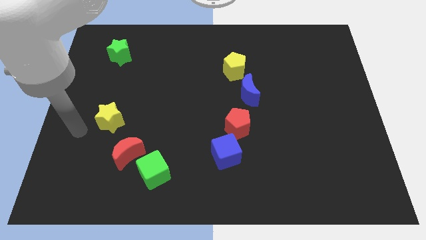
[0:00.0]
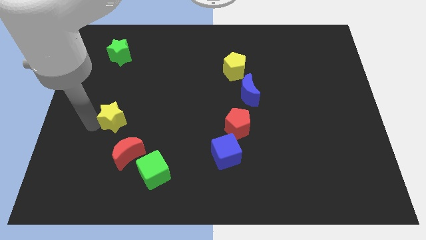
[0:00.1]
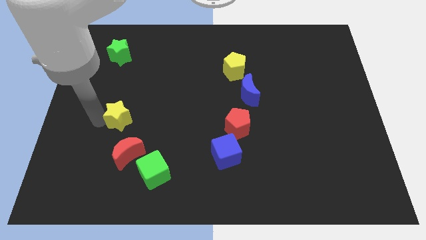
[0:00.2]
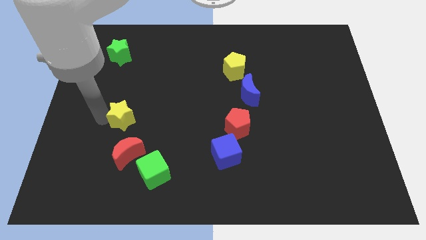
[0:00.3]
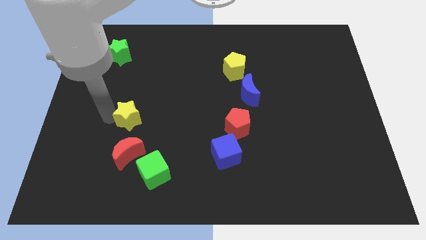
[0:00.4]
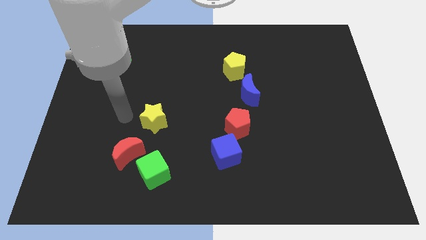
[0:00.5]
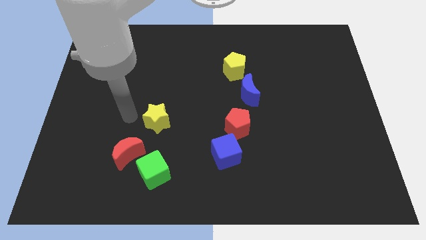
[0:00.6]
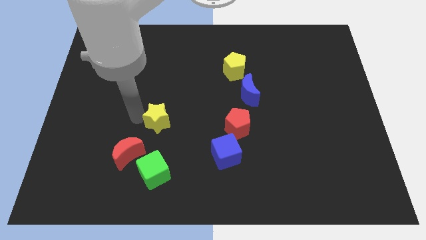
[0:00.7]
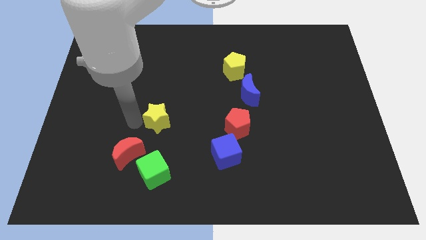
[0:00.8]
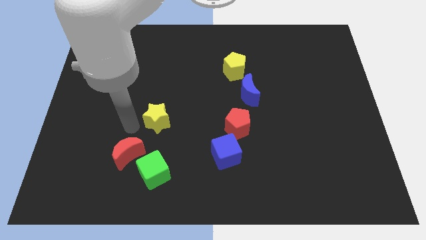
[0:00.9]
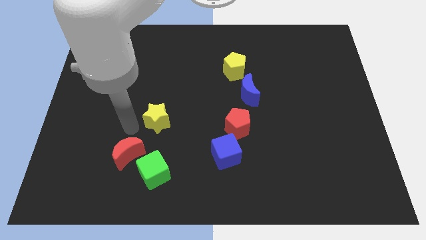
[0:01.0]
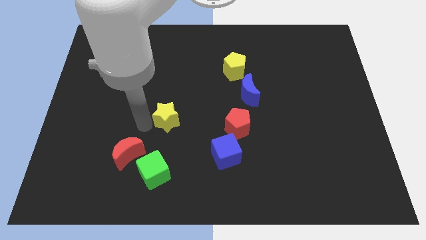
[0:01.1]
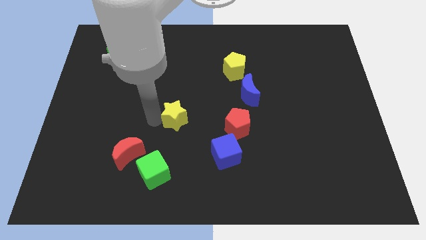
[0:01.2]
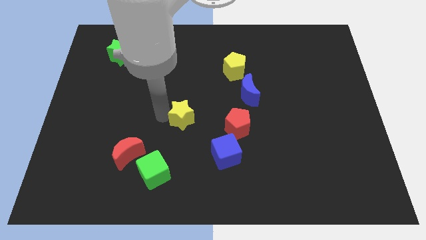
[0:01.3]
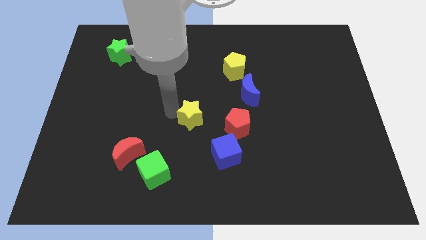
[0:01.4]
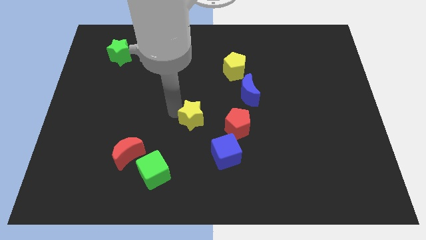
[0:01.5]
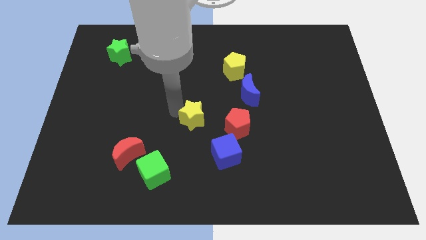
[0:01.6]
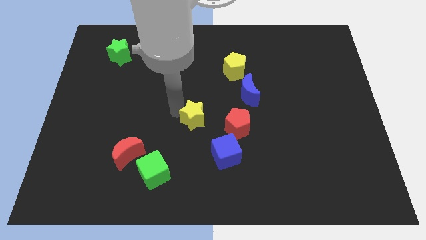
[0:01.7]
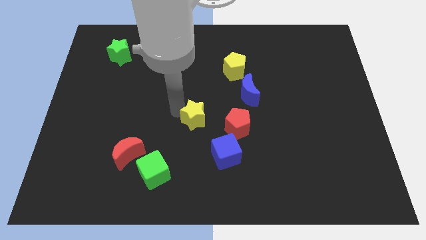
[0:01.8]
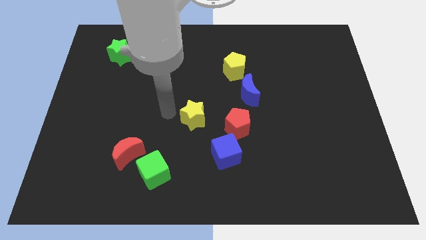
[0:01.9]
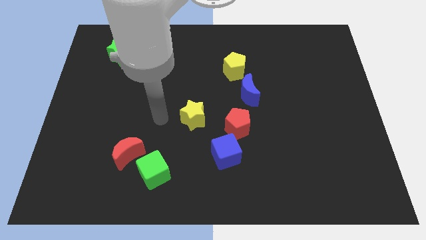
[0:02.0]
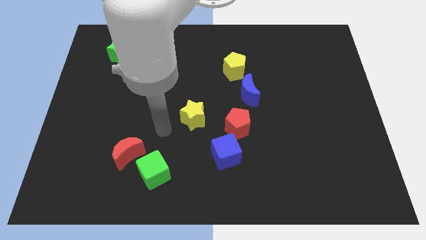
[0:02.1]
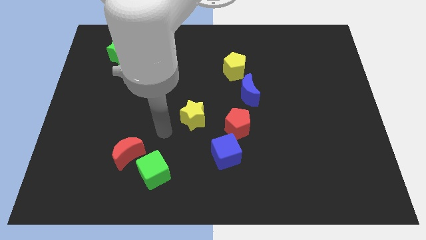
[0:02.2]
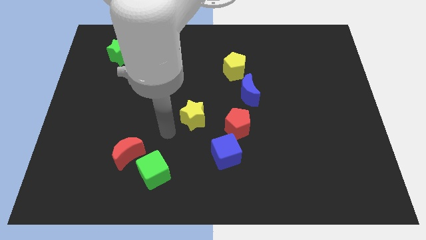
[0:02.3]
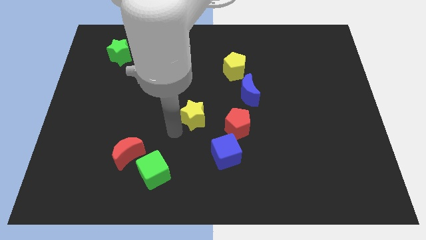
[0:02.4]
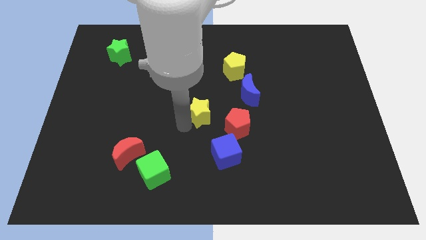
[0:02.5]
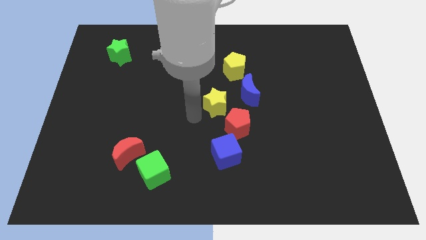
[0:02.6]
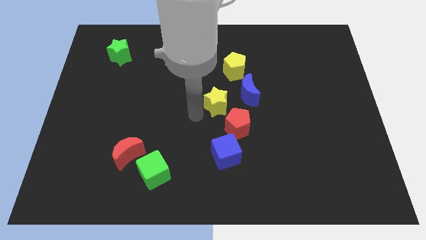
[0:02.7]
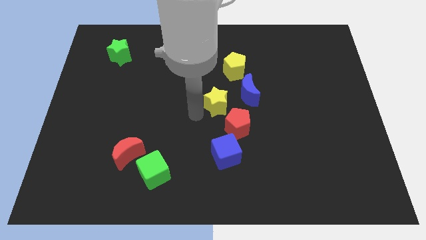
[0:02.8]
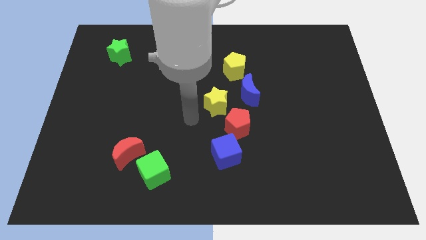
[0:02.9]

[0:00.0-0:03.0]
move the yellow star diagonal above the red pentagon

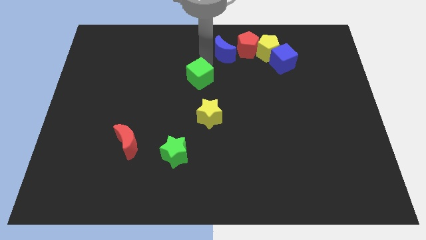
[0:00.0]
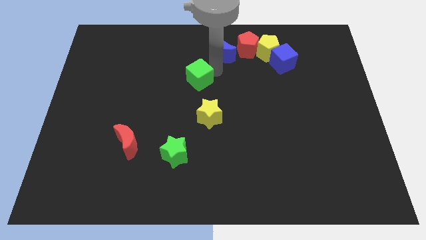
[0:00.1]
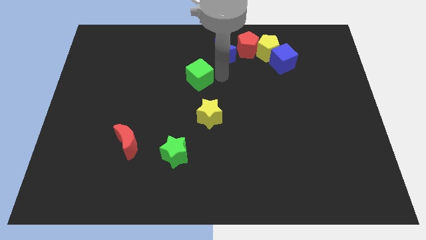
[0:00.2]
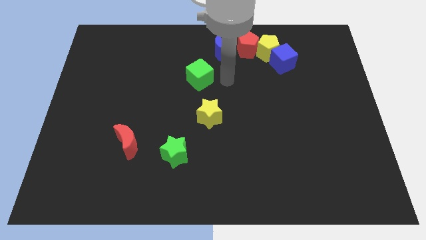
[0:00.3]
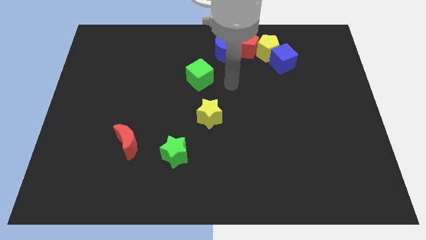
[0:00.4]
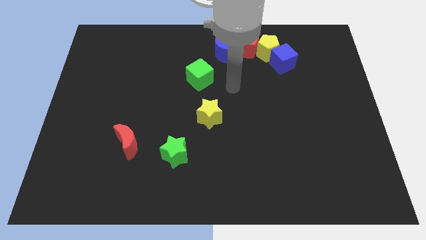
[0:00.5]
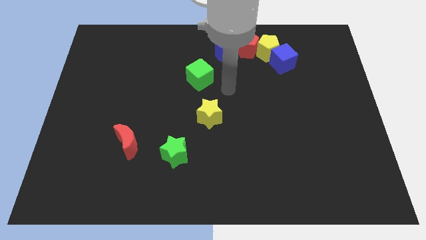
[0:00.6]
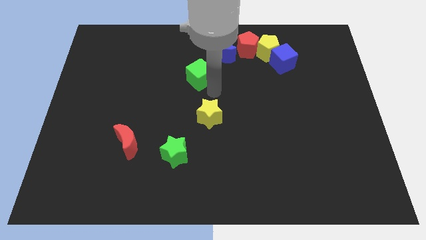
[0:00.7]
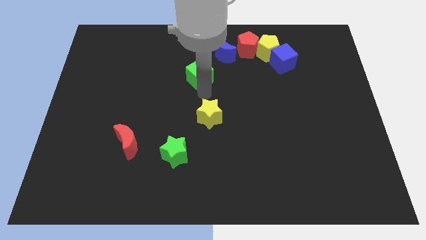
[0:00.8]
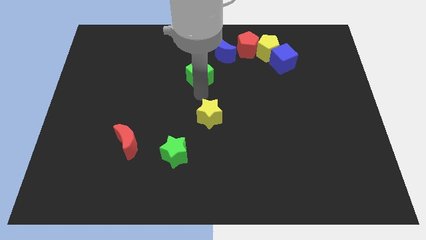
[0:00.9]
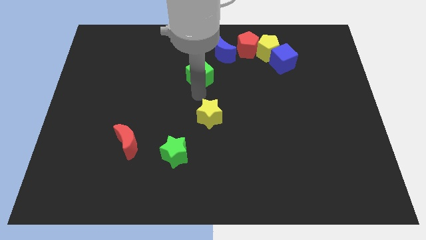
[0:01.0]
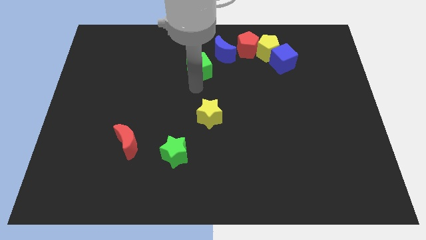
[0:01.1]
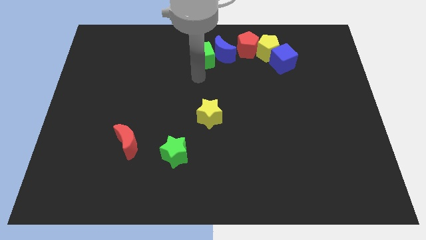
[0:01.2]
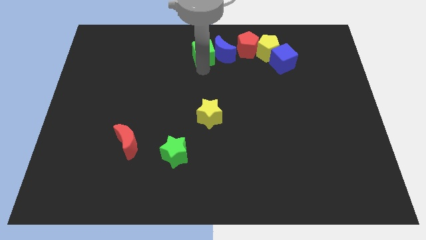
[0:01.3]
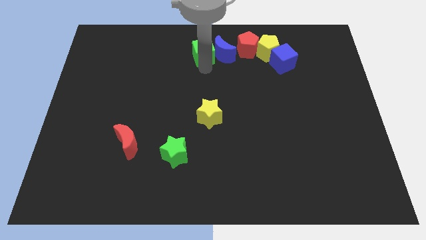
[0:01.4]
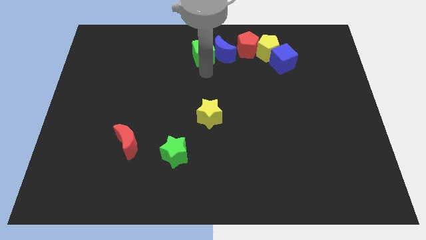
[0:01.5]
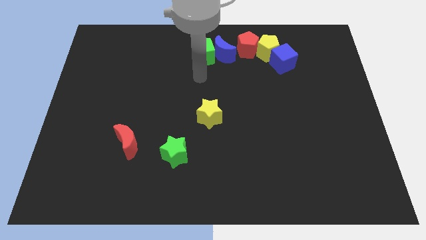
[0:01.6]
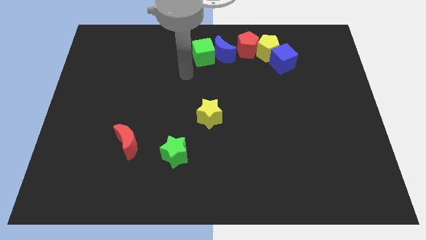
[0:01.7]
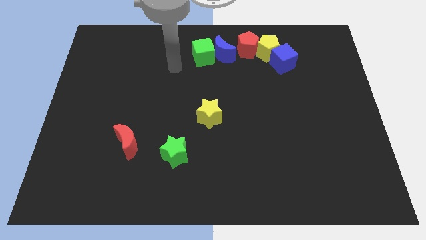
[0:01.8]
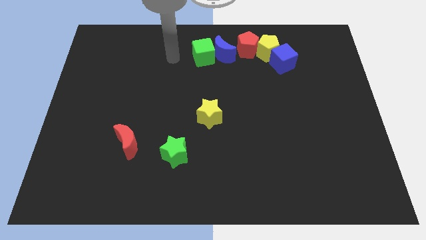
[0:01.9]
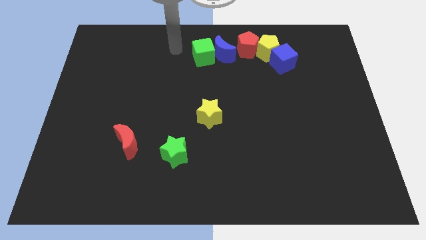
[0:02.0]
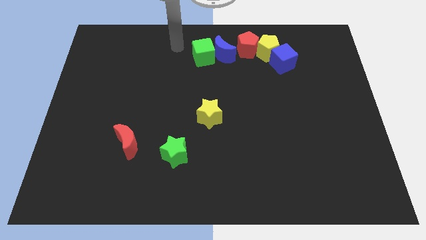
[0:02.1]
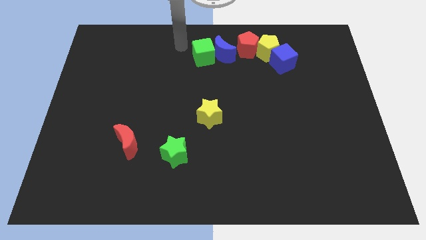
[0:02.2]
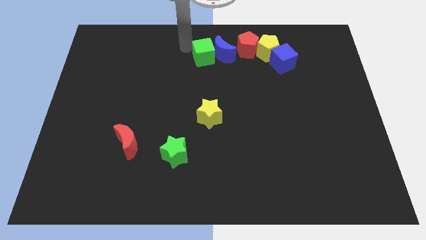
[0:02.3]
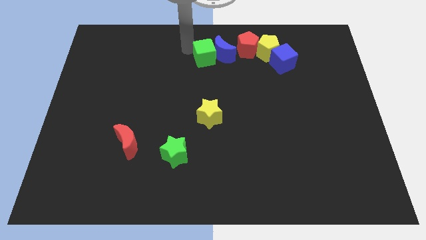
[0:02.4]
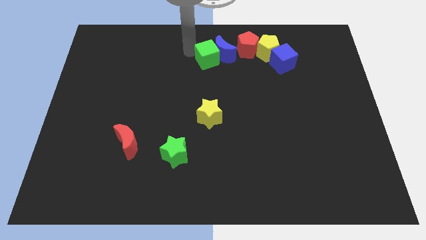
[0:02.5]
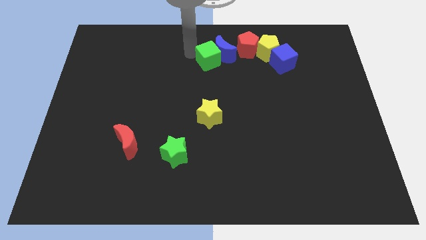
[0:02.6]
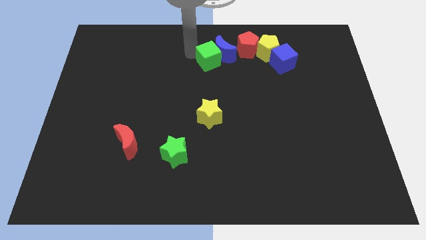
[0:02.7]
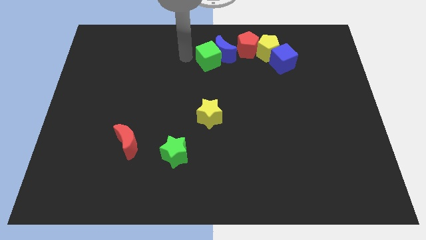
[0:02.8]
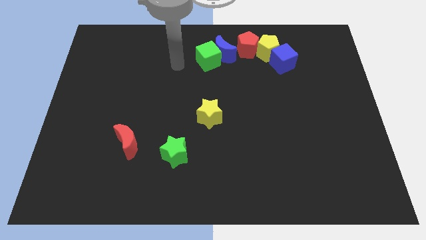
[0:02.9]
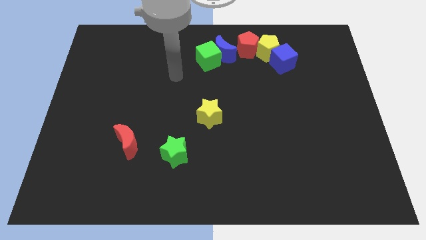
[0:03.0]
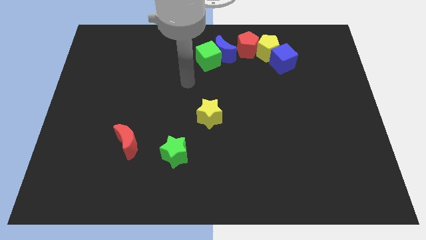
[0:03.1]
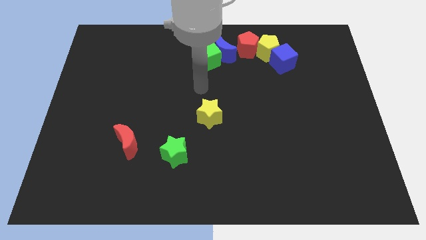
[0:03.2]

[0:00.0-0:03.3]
put the green cube diagonally to the blue moon

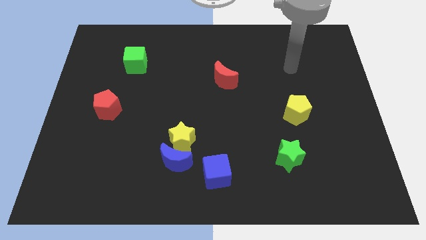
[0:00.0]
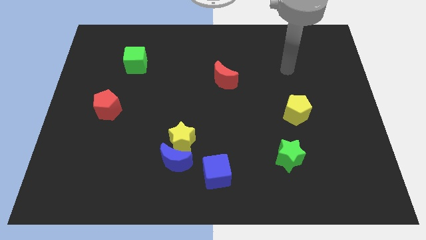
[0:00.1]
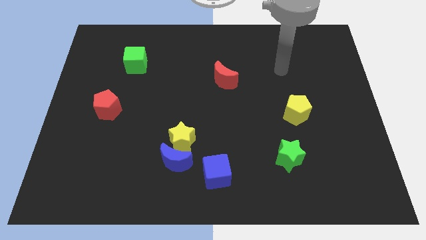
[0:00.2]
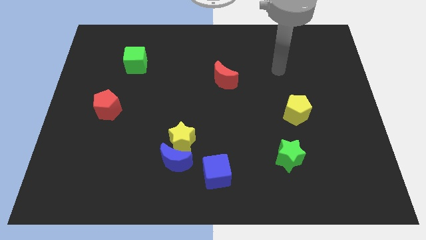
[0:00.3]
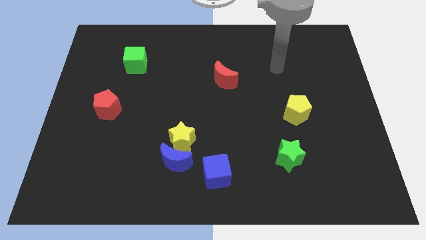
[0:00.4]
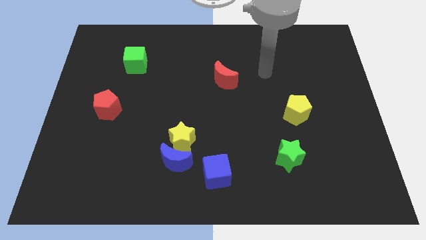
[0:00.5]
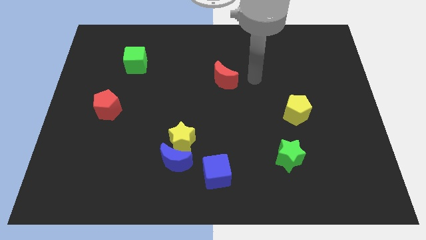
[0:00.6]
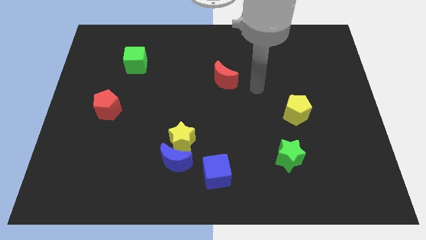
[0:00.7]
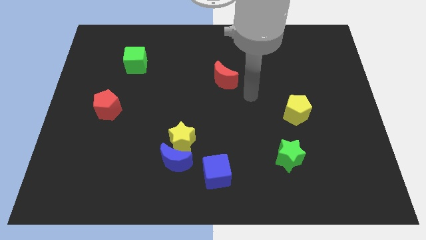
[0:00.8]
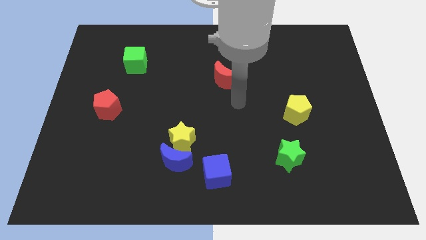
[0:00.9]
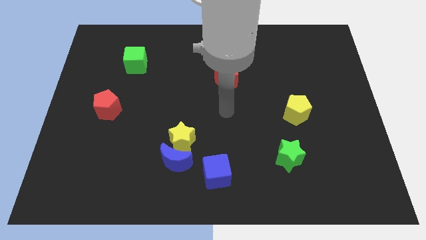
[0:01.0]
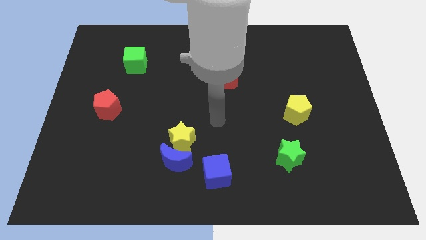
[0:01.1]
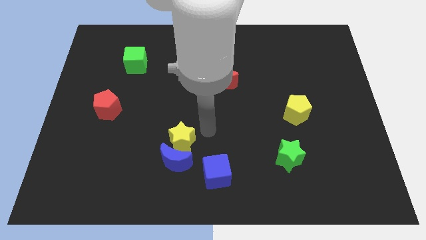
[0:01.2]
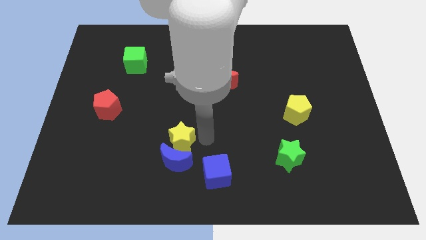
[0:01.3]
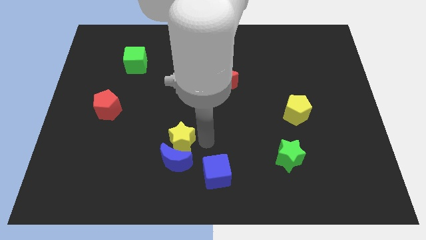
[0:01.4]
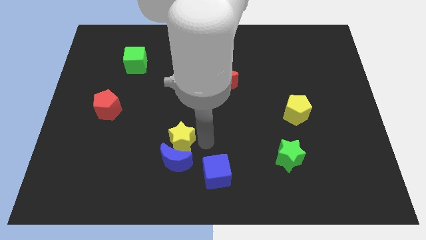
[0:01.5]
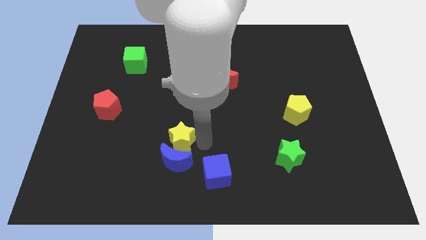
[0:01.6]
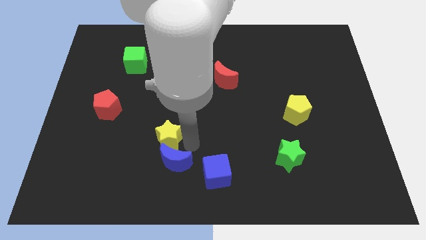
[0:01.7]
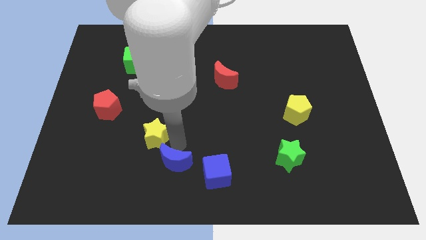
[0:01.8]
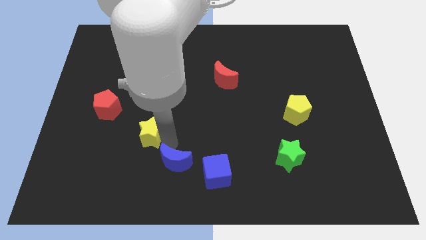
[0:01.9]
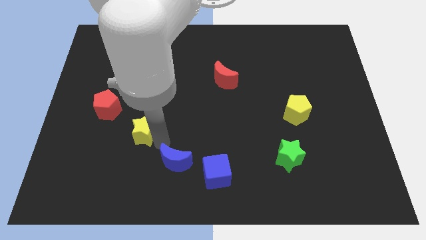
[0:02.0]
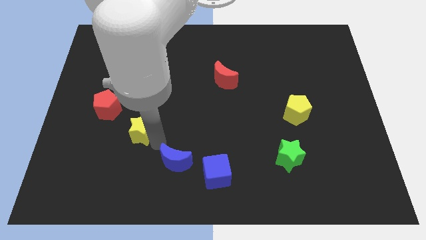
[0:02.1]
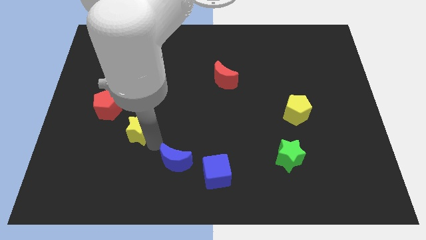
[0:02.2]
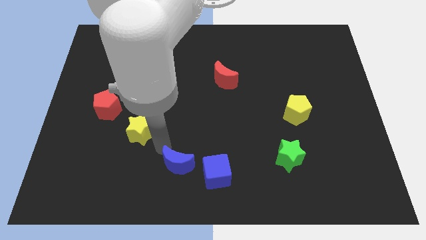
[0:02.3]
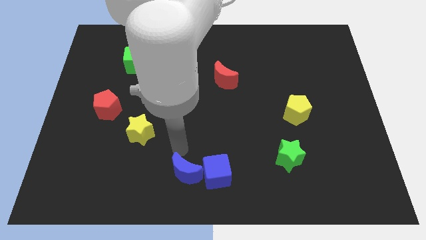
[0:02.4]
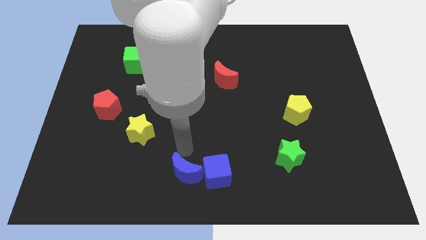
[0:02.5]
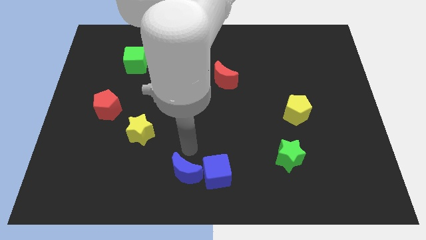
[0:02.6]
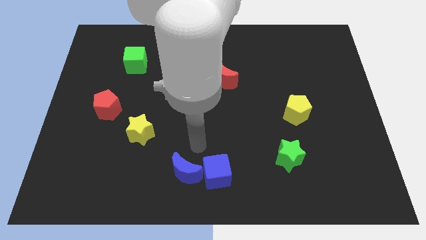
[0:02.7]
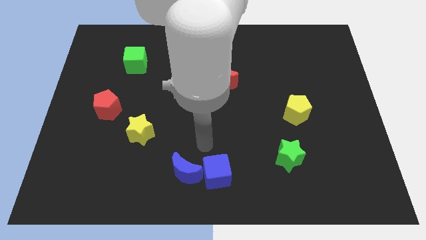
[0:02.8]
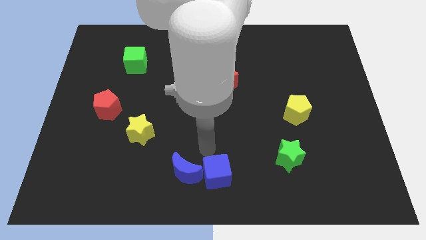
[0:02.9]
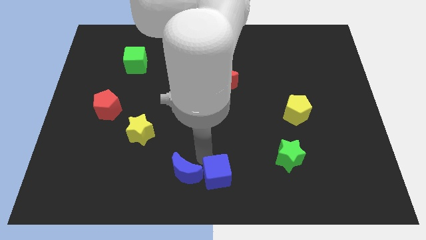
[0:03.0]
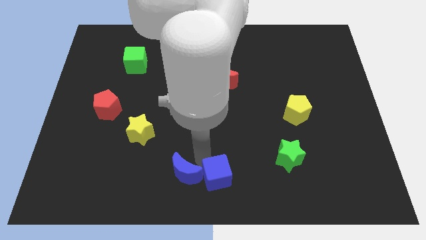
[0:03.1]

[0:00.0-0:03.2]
move the yellow star towards the red pentagon
